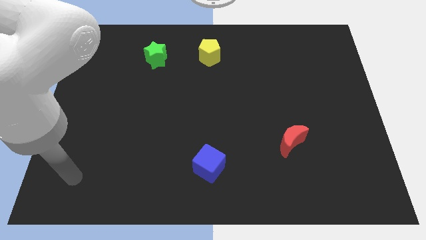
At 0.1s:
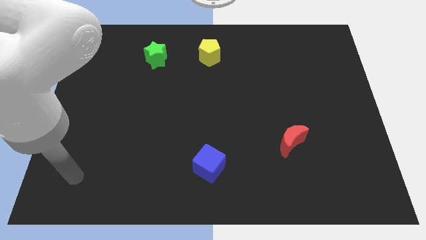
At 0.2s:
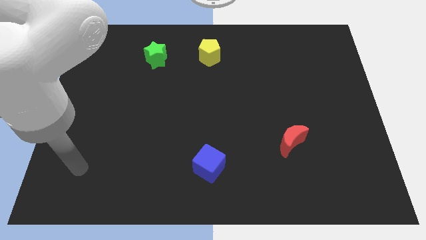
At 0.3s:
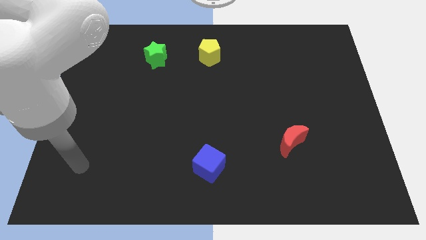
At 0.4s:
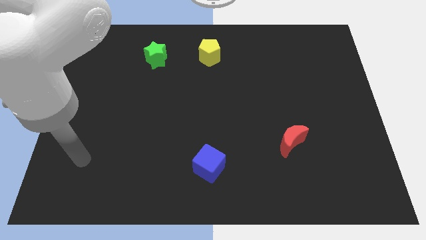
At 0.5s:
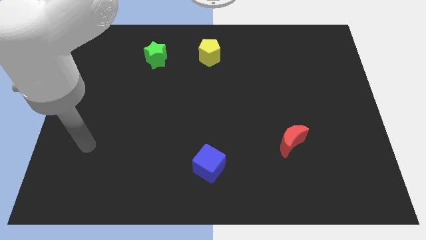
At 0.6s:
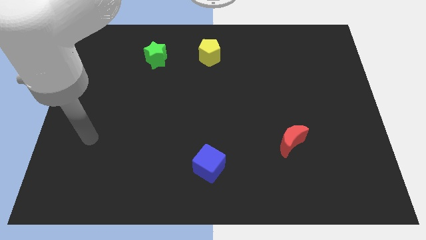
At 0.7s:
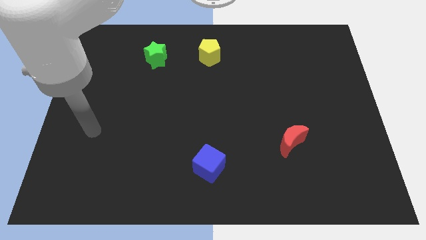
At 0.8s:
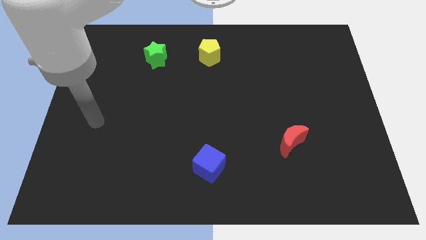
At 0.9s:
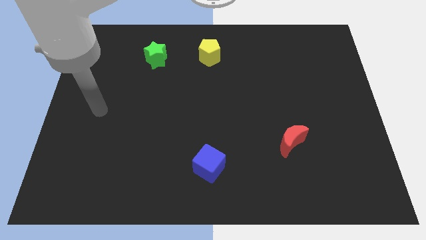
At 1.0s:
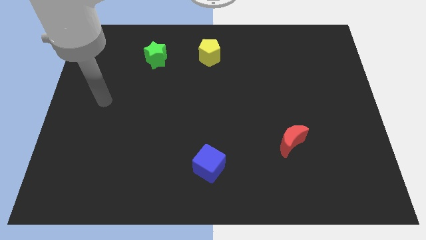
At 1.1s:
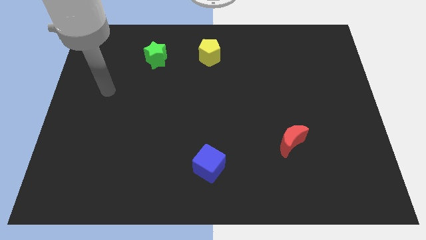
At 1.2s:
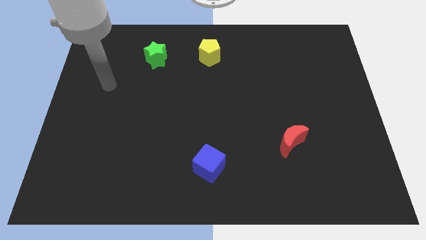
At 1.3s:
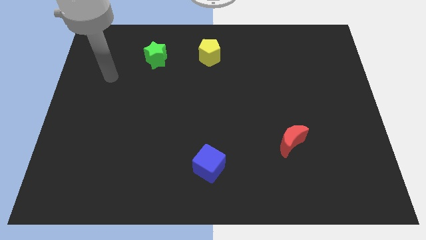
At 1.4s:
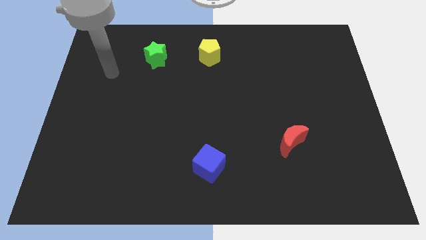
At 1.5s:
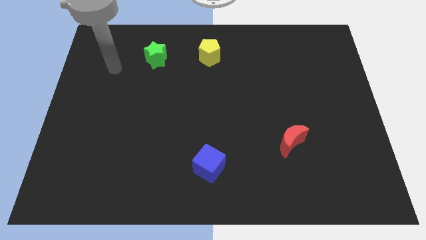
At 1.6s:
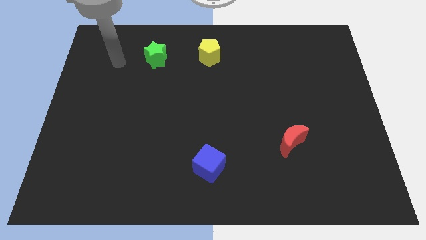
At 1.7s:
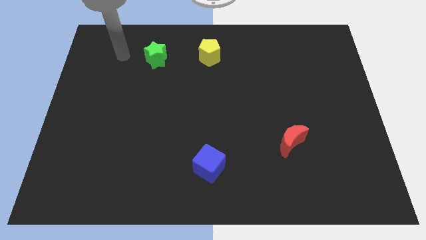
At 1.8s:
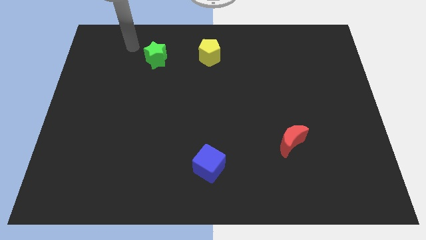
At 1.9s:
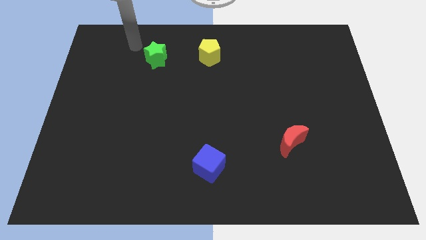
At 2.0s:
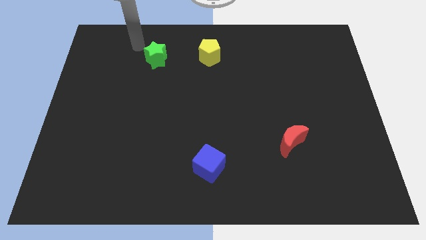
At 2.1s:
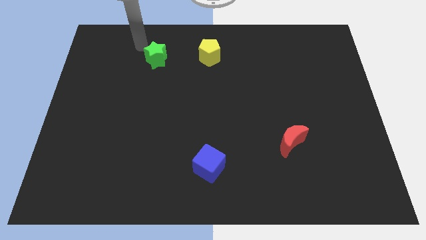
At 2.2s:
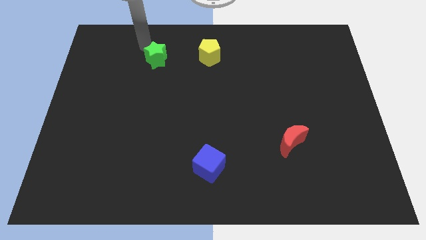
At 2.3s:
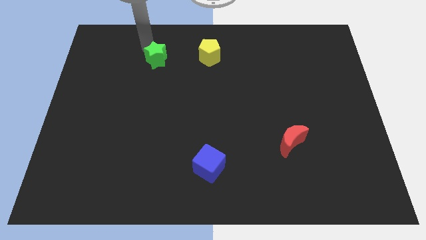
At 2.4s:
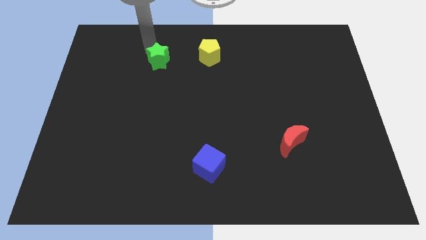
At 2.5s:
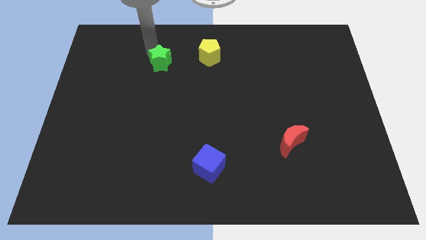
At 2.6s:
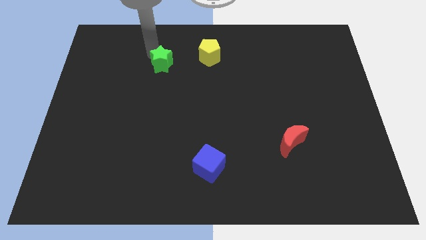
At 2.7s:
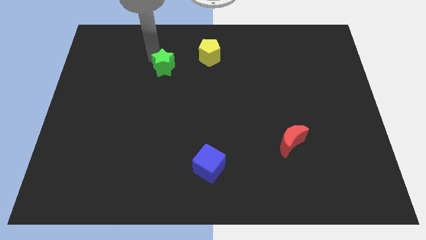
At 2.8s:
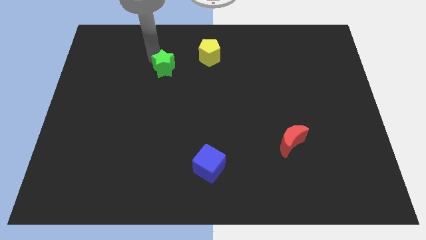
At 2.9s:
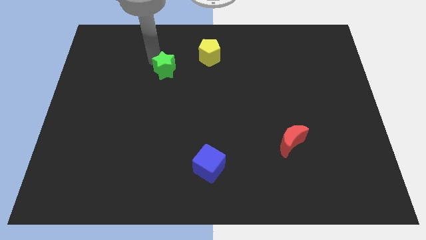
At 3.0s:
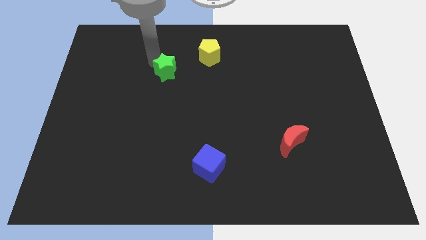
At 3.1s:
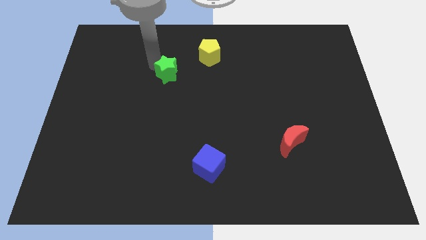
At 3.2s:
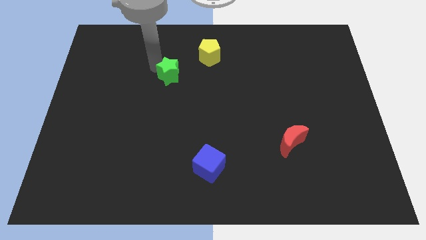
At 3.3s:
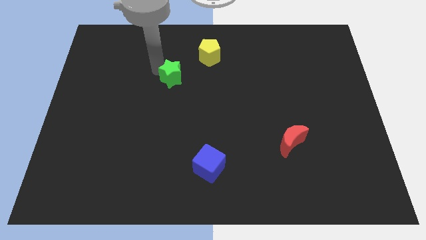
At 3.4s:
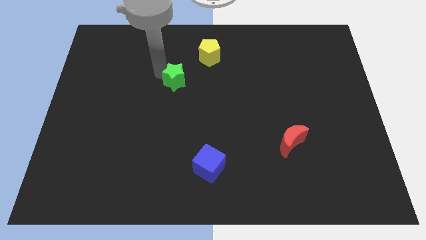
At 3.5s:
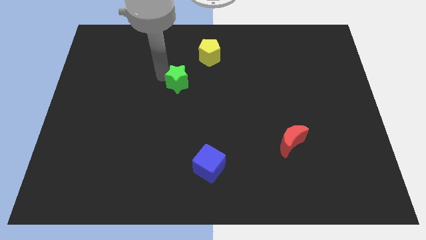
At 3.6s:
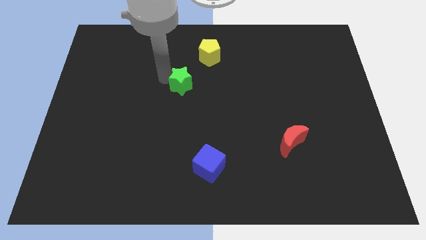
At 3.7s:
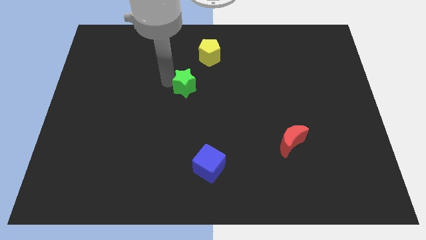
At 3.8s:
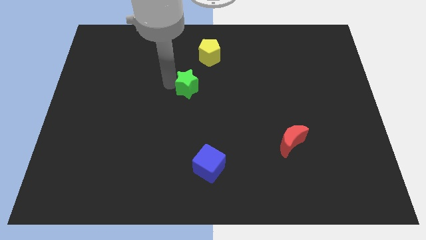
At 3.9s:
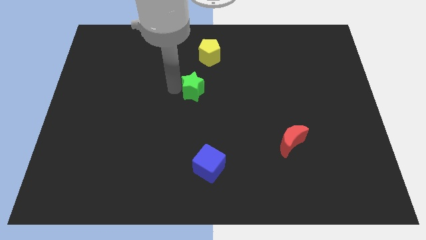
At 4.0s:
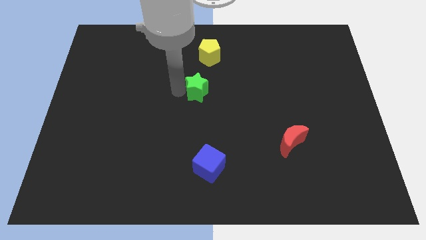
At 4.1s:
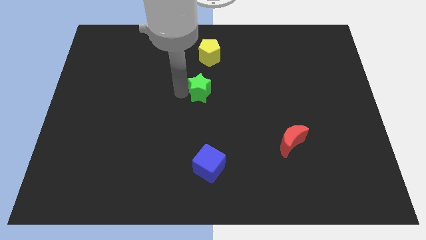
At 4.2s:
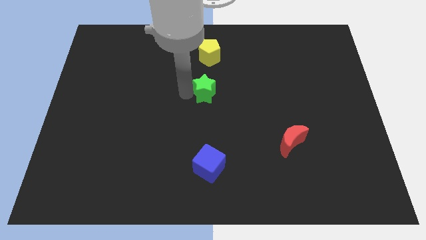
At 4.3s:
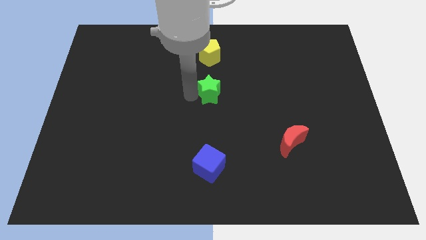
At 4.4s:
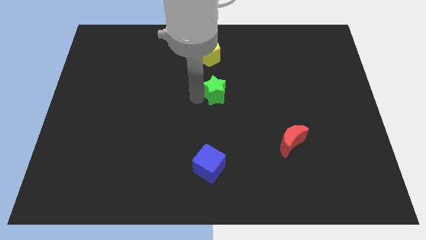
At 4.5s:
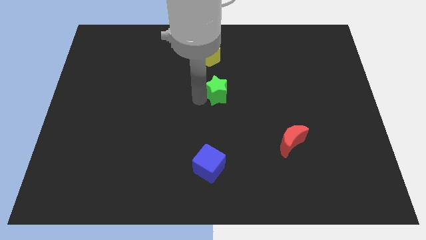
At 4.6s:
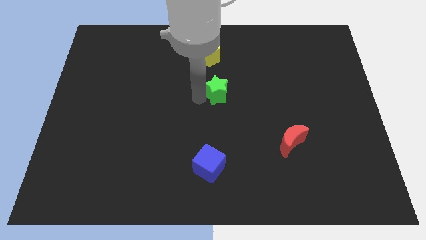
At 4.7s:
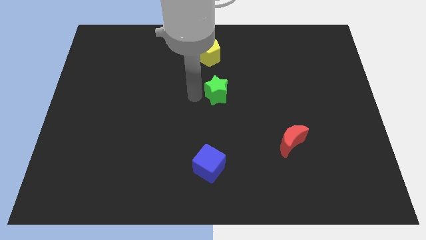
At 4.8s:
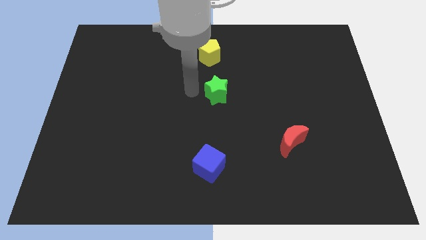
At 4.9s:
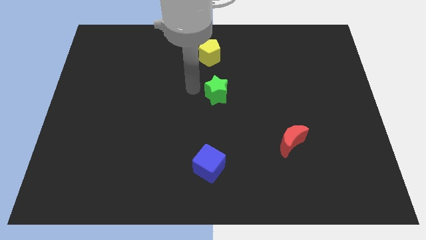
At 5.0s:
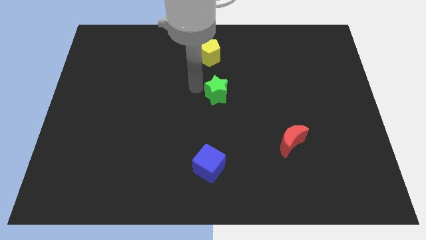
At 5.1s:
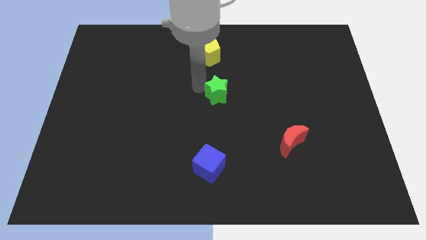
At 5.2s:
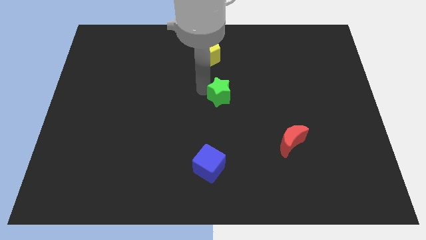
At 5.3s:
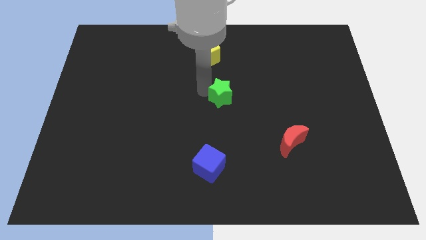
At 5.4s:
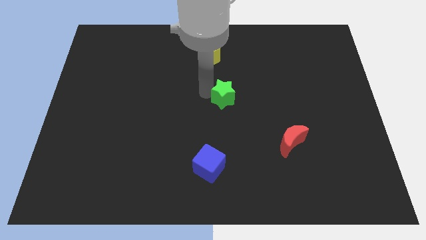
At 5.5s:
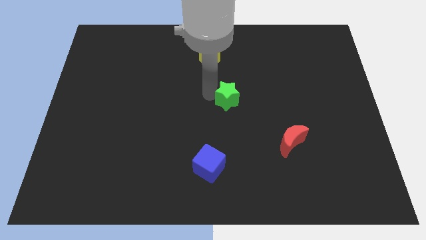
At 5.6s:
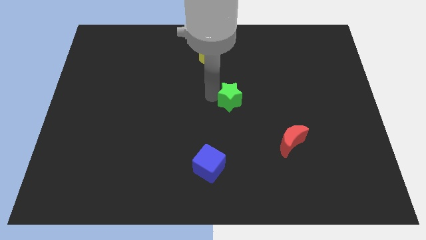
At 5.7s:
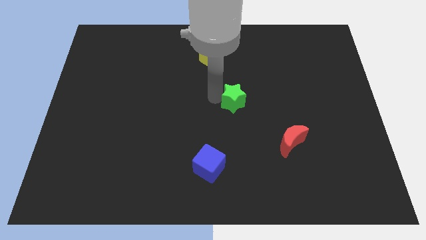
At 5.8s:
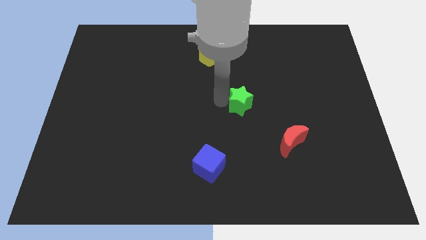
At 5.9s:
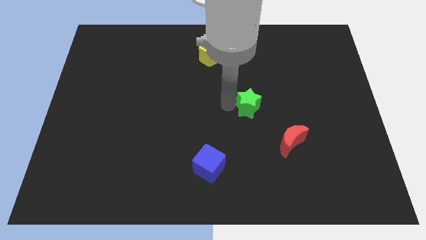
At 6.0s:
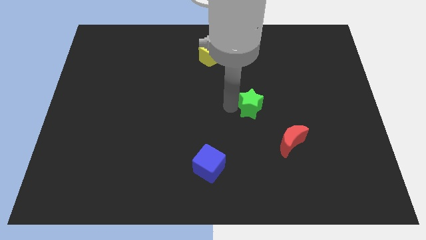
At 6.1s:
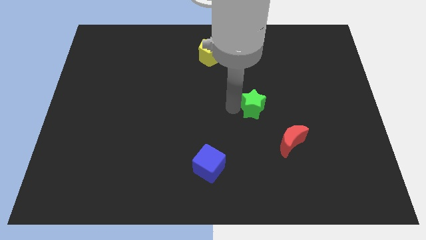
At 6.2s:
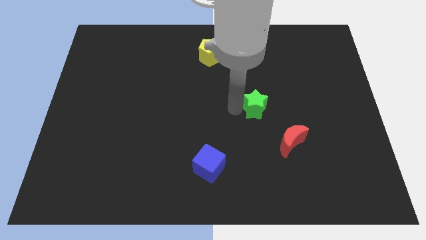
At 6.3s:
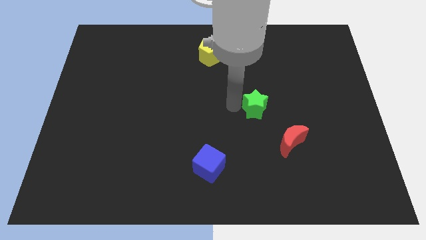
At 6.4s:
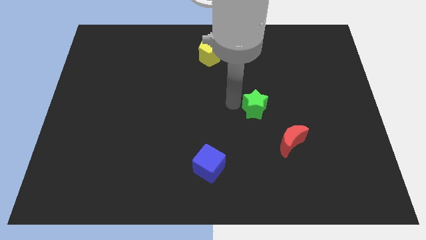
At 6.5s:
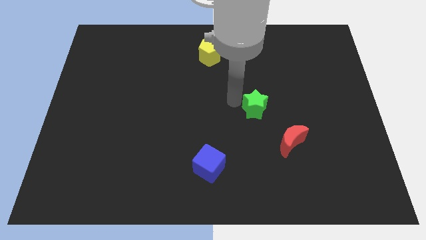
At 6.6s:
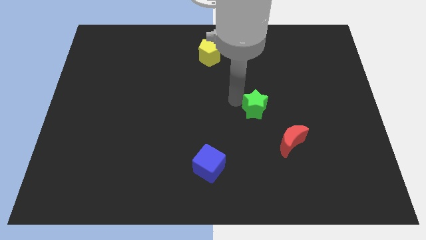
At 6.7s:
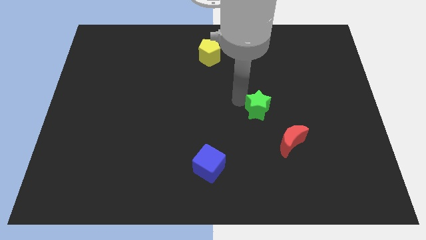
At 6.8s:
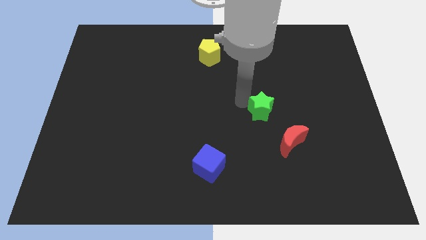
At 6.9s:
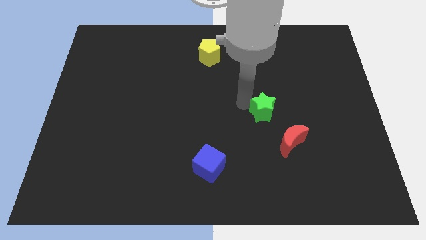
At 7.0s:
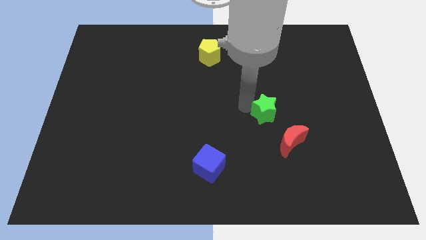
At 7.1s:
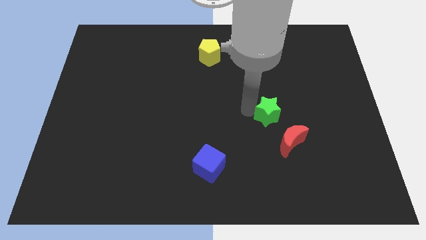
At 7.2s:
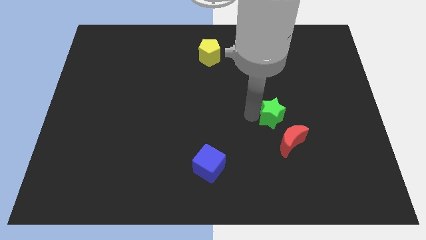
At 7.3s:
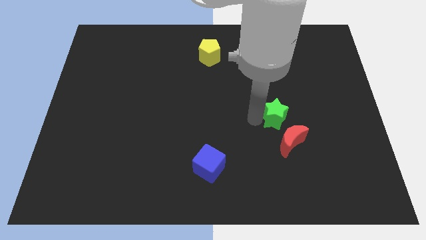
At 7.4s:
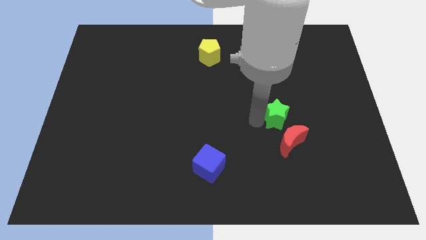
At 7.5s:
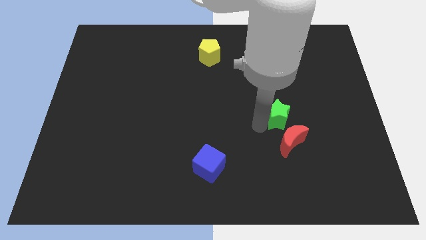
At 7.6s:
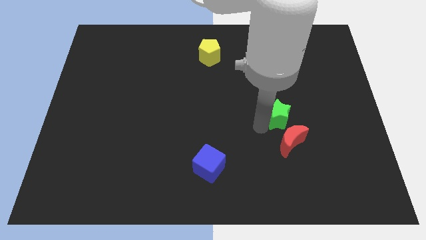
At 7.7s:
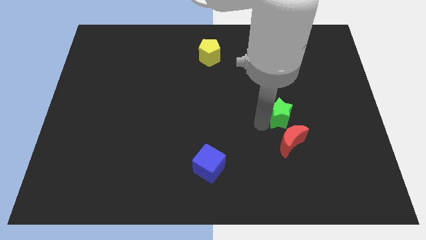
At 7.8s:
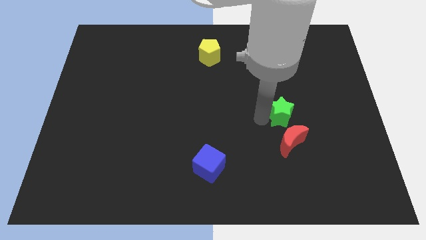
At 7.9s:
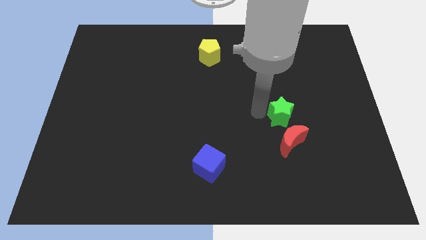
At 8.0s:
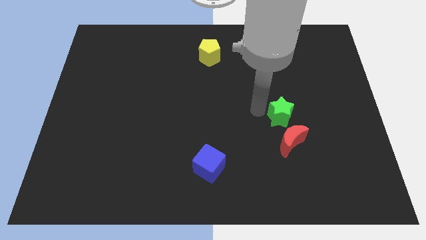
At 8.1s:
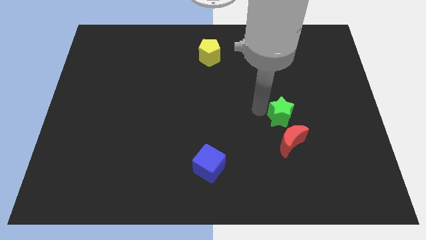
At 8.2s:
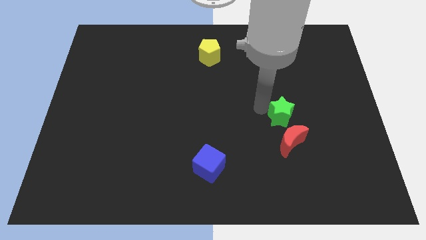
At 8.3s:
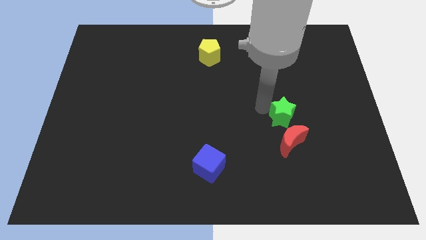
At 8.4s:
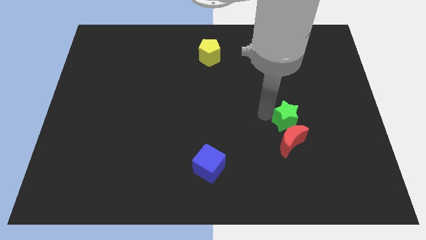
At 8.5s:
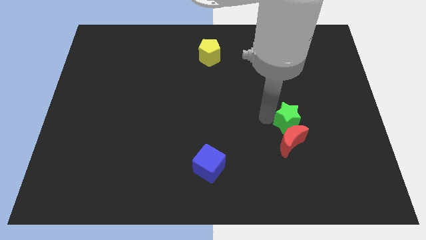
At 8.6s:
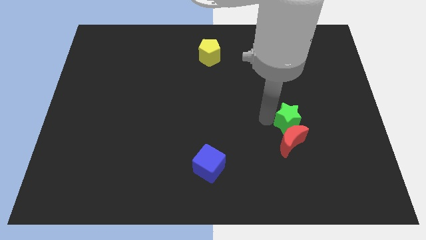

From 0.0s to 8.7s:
put the star towards the red moon

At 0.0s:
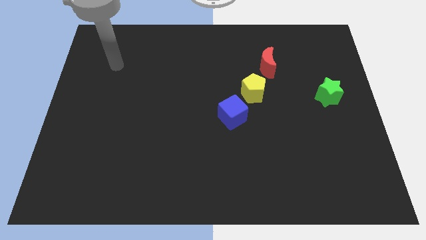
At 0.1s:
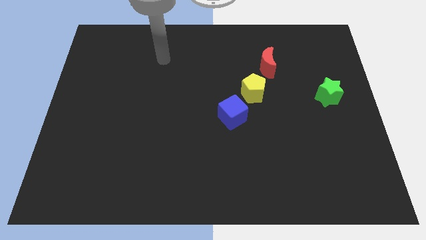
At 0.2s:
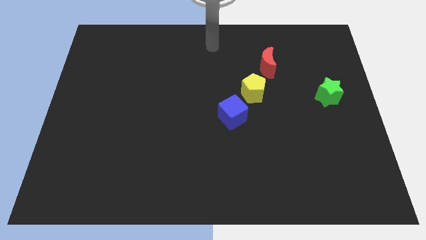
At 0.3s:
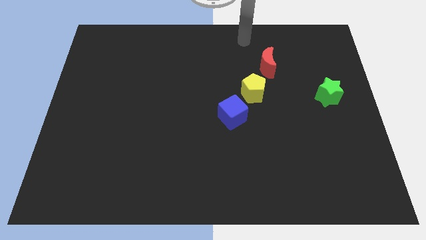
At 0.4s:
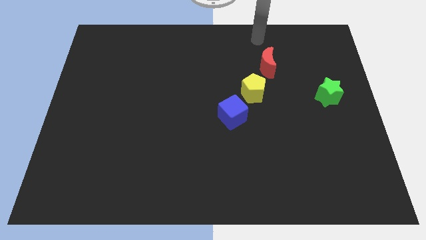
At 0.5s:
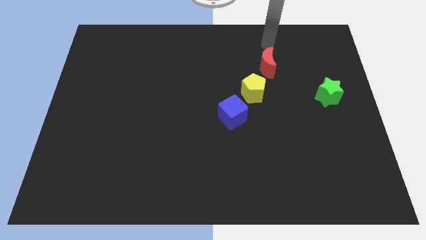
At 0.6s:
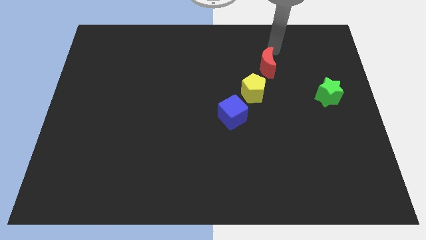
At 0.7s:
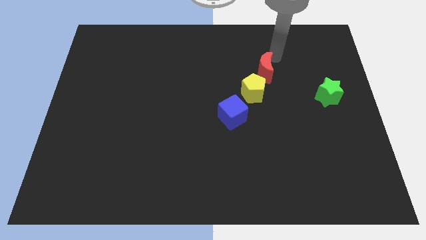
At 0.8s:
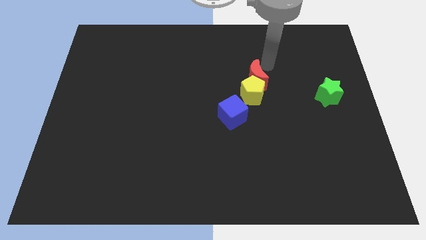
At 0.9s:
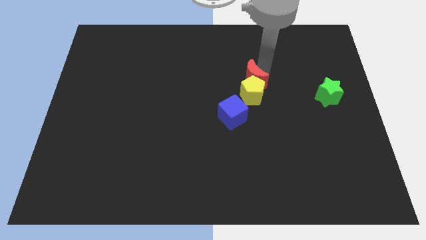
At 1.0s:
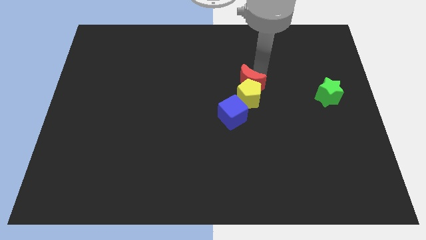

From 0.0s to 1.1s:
put the red moon towards the yellow block
